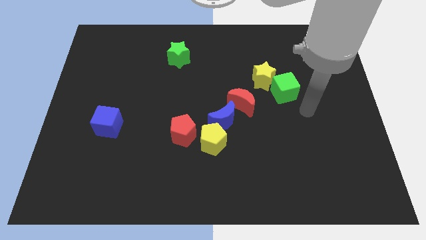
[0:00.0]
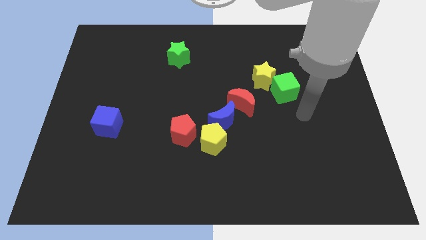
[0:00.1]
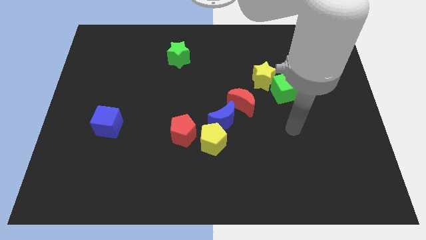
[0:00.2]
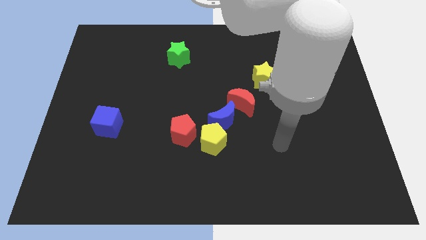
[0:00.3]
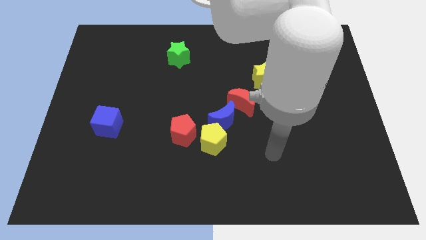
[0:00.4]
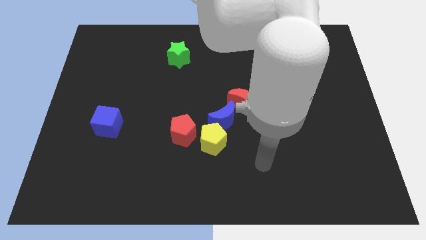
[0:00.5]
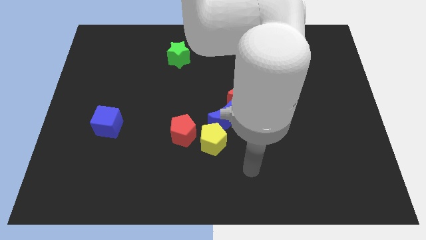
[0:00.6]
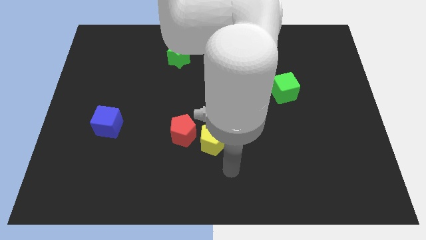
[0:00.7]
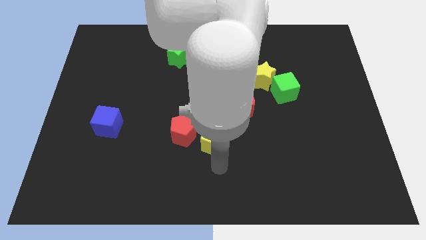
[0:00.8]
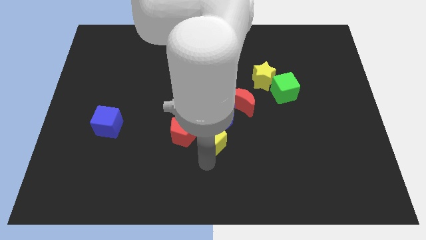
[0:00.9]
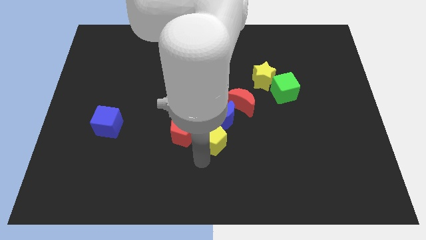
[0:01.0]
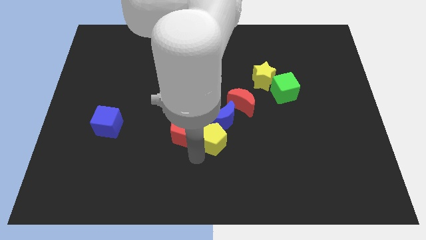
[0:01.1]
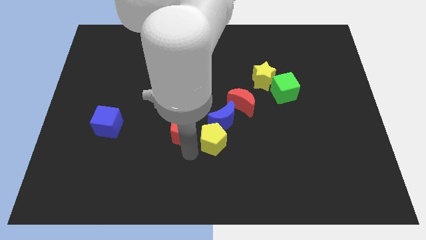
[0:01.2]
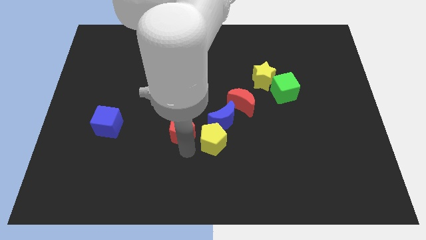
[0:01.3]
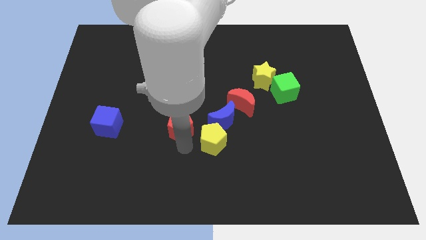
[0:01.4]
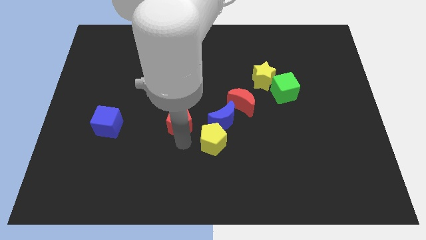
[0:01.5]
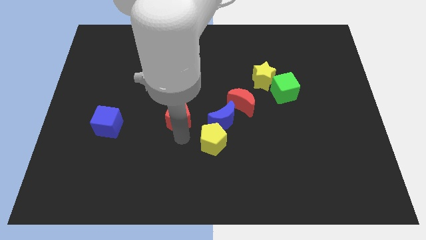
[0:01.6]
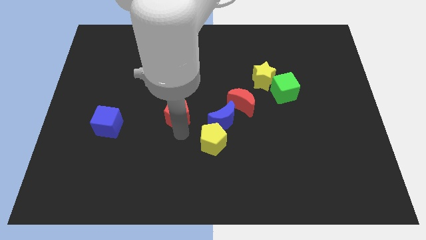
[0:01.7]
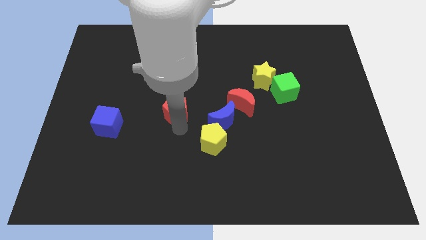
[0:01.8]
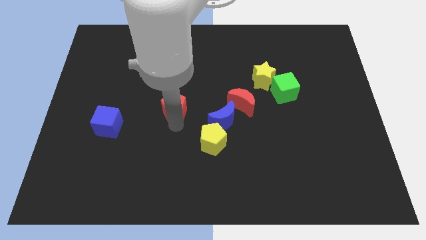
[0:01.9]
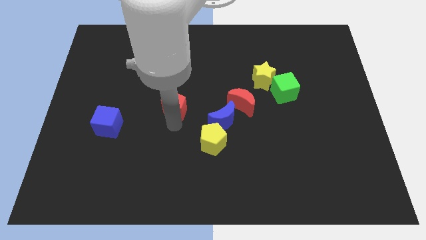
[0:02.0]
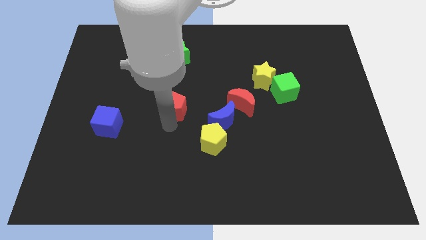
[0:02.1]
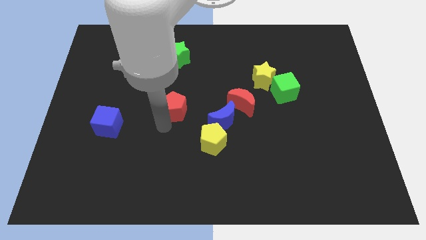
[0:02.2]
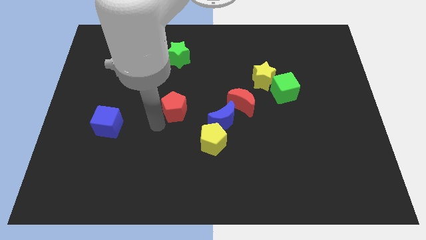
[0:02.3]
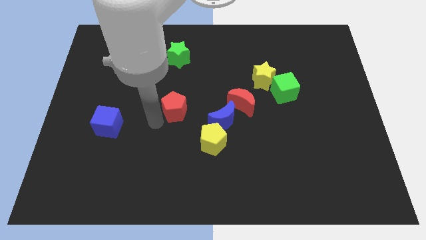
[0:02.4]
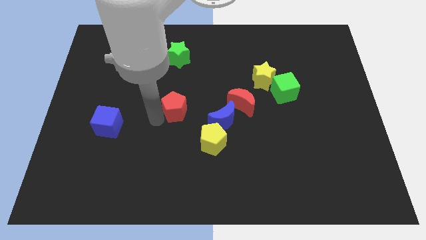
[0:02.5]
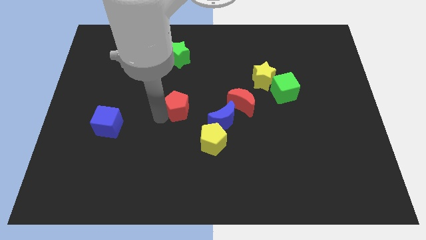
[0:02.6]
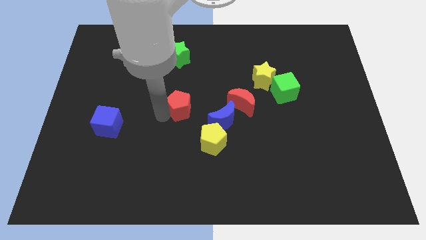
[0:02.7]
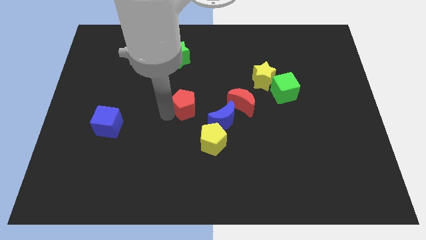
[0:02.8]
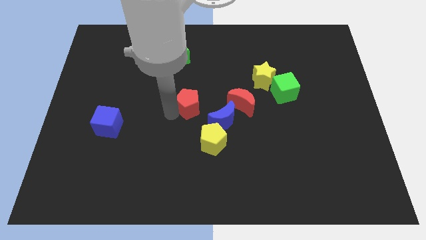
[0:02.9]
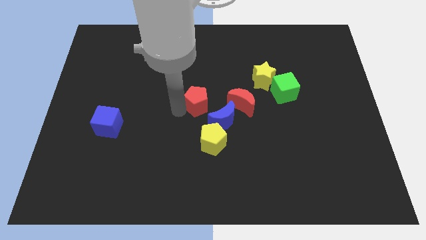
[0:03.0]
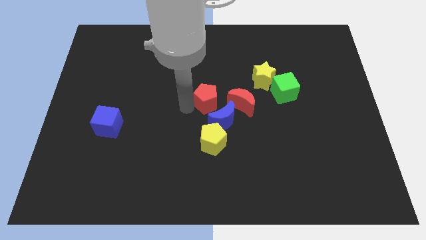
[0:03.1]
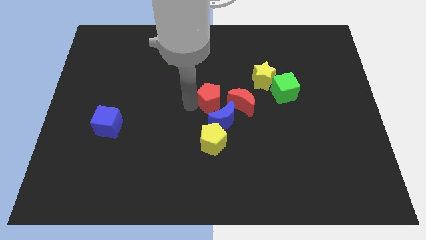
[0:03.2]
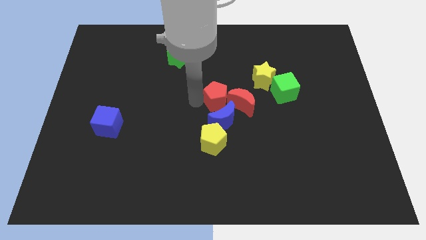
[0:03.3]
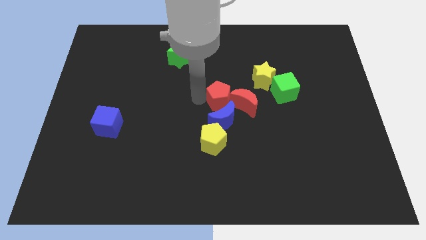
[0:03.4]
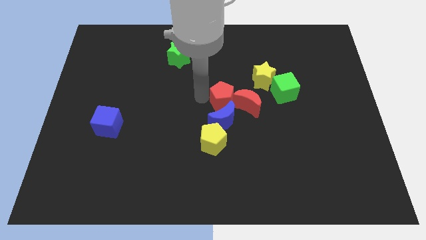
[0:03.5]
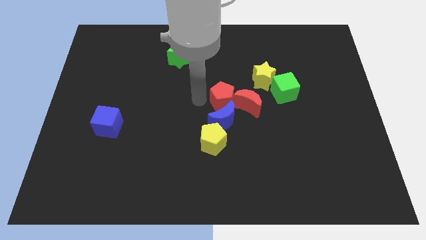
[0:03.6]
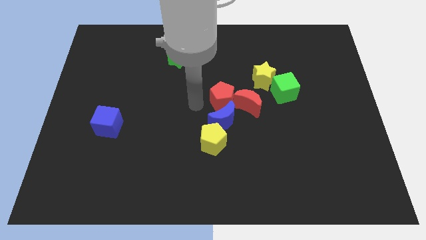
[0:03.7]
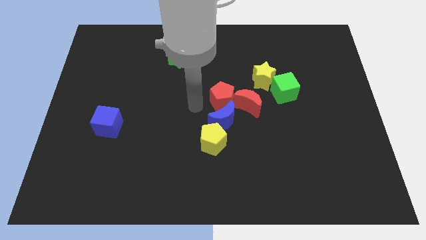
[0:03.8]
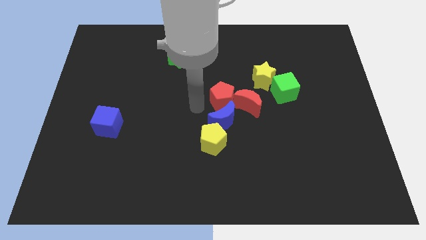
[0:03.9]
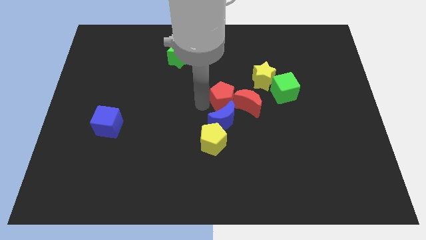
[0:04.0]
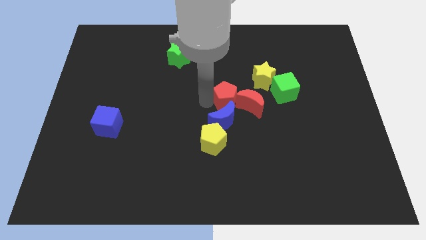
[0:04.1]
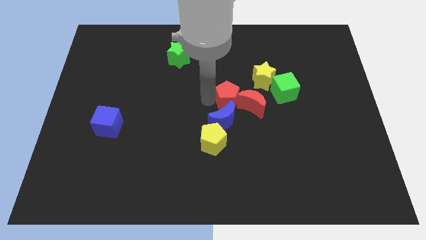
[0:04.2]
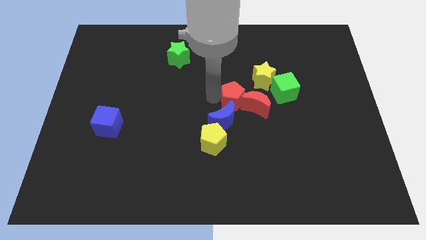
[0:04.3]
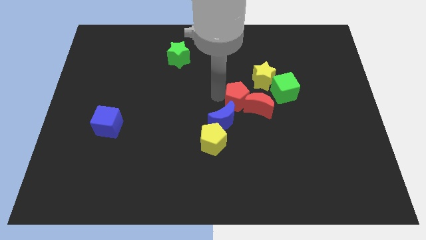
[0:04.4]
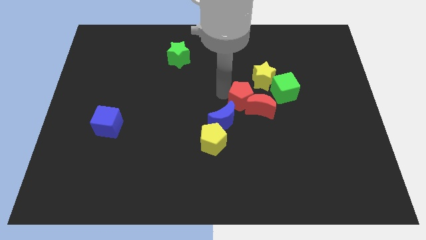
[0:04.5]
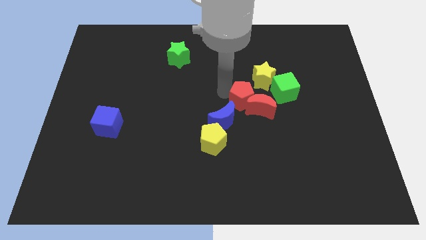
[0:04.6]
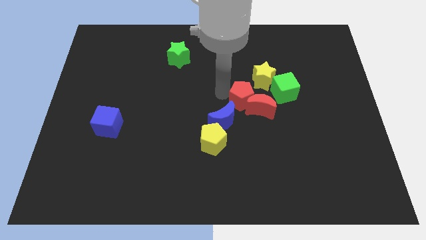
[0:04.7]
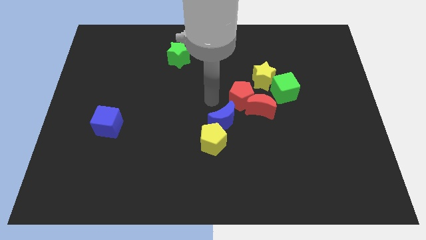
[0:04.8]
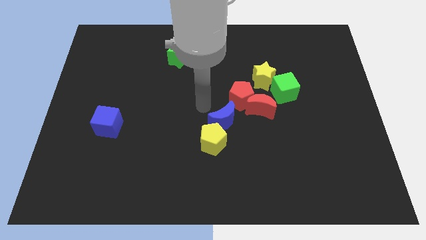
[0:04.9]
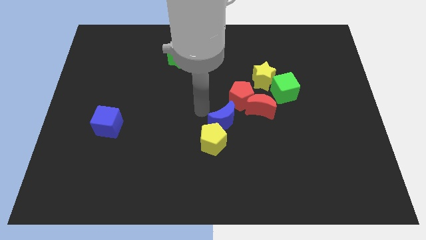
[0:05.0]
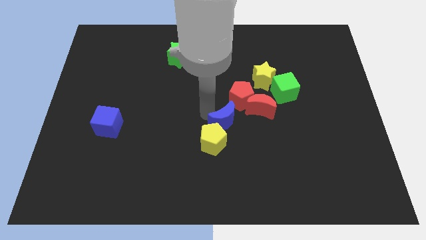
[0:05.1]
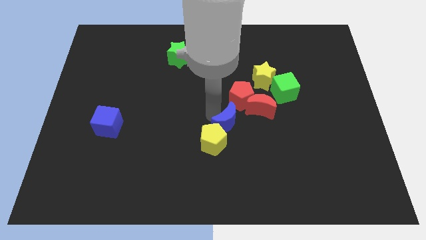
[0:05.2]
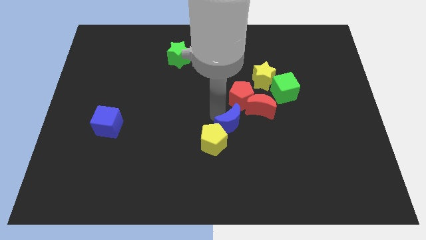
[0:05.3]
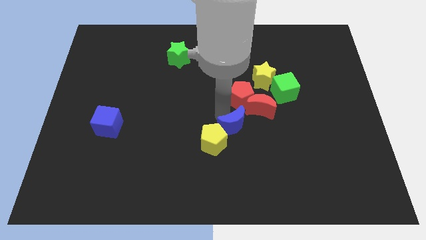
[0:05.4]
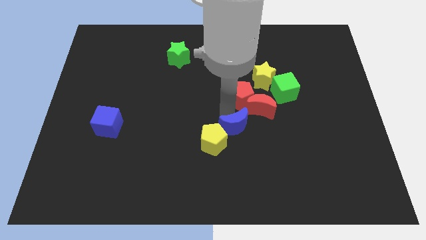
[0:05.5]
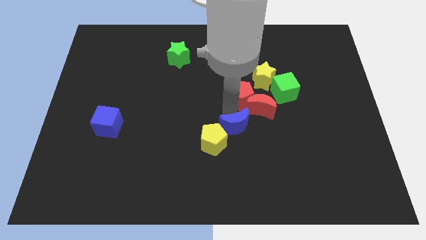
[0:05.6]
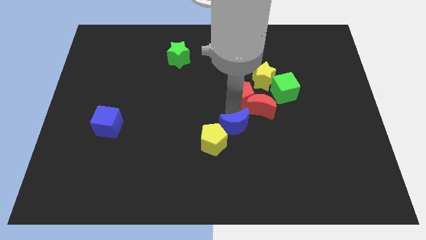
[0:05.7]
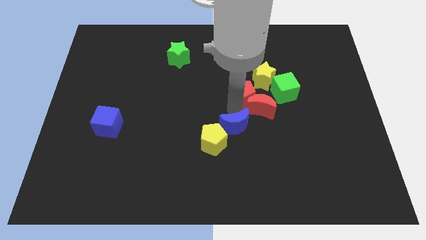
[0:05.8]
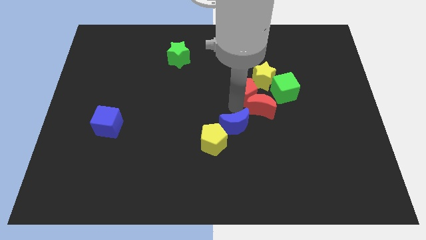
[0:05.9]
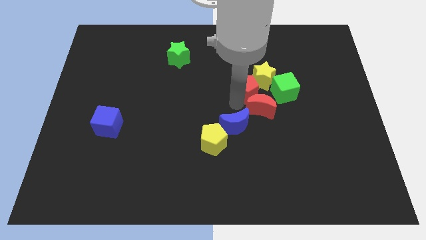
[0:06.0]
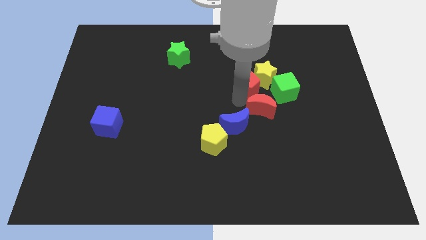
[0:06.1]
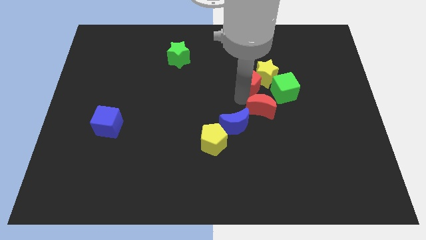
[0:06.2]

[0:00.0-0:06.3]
slide the red pentagon to the yellow star

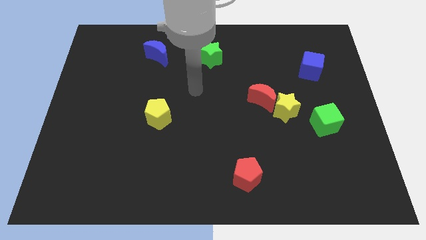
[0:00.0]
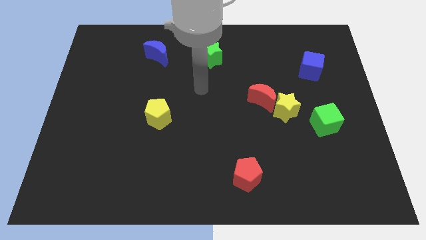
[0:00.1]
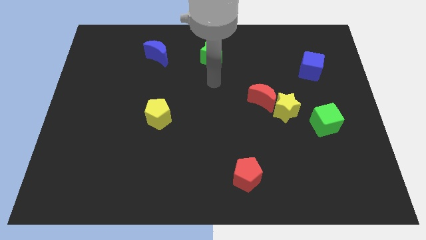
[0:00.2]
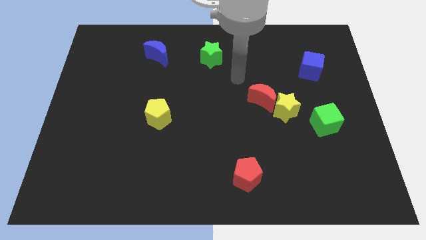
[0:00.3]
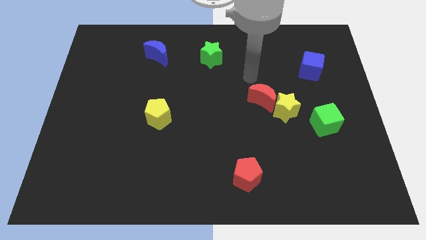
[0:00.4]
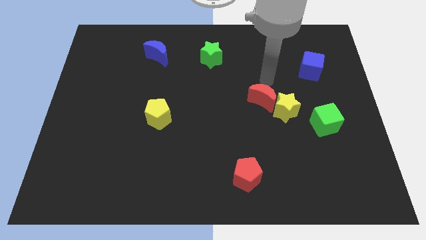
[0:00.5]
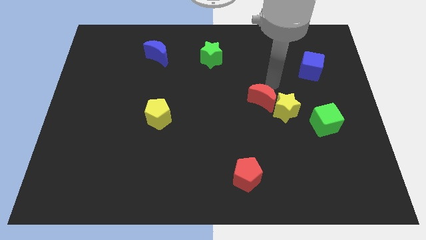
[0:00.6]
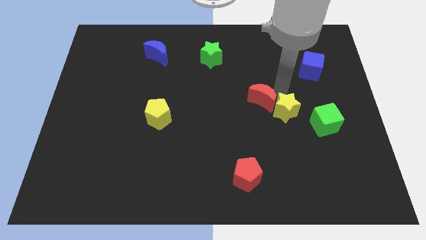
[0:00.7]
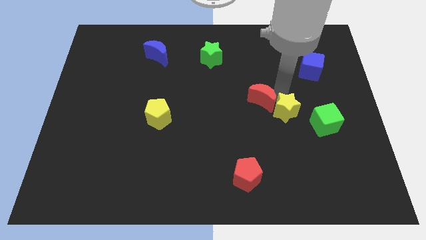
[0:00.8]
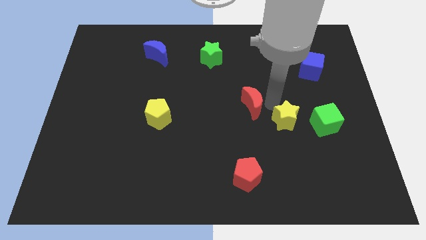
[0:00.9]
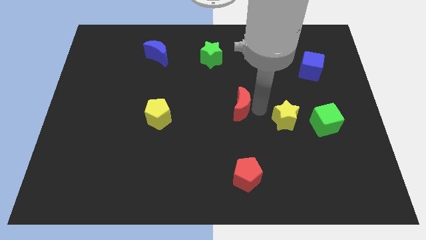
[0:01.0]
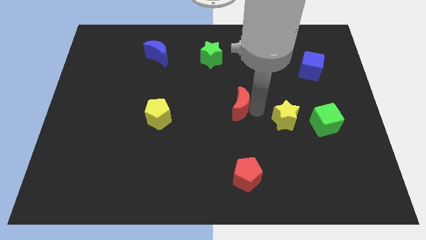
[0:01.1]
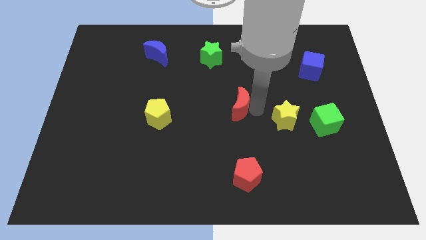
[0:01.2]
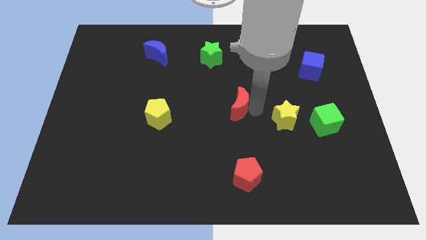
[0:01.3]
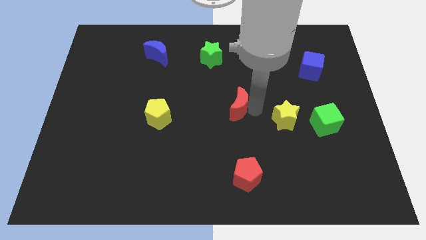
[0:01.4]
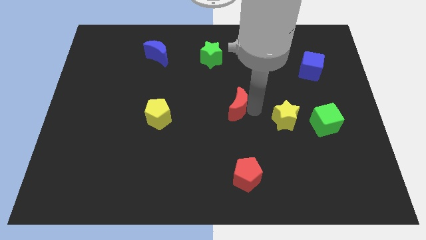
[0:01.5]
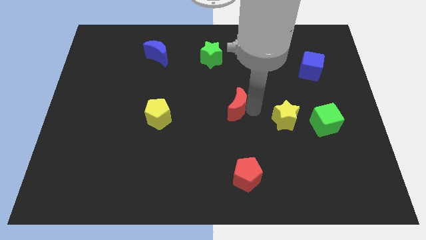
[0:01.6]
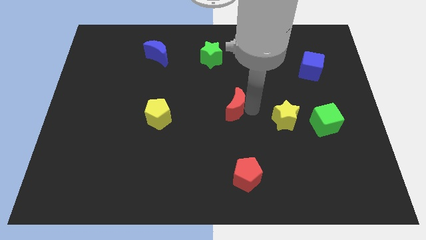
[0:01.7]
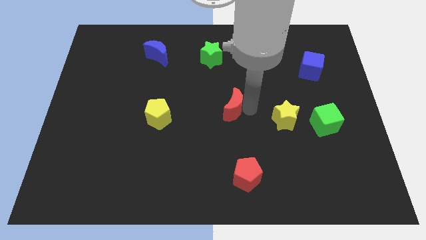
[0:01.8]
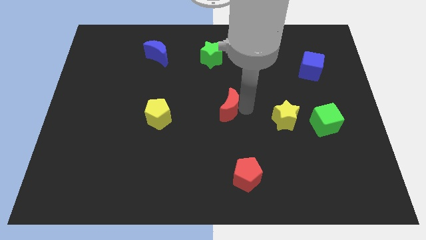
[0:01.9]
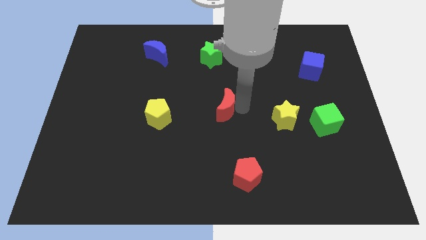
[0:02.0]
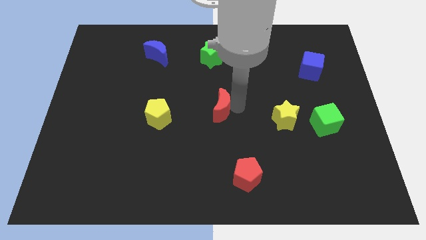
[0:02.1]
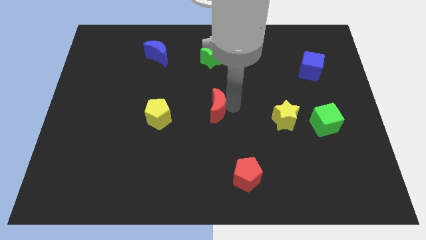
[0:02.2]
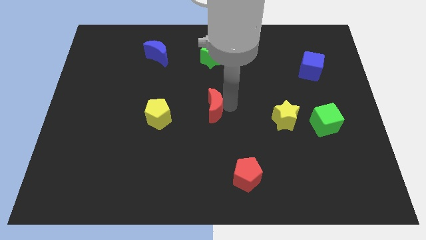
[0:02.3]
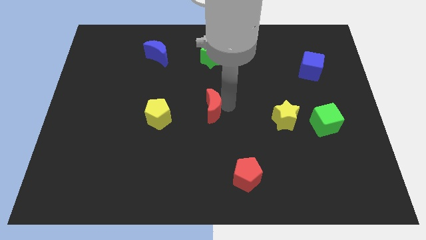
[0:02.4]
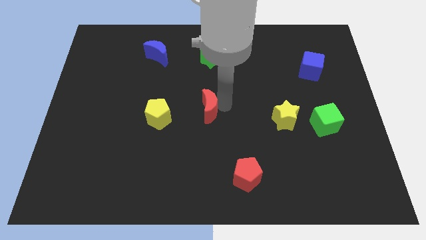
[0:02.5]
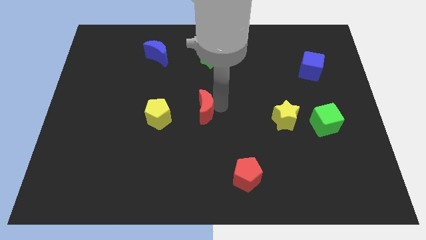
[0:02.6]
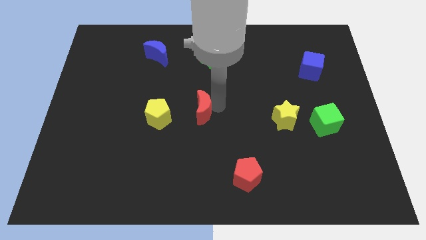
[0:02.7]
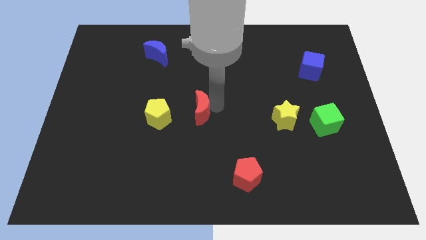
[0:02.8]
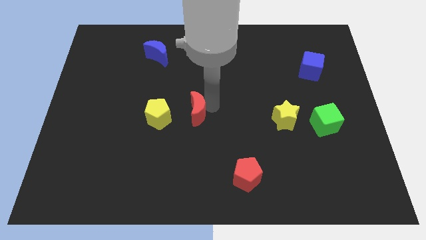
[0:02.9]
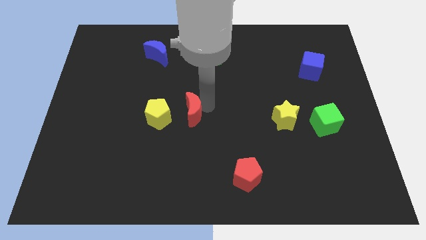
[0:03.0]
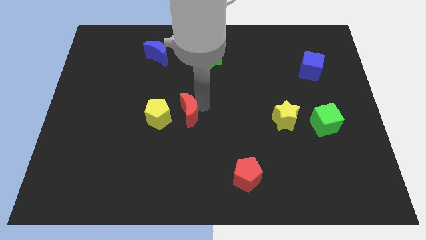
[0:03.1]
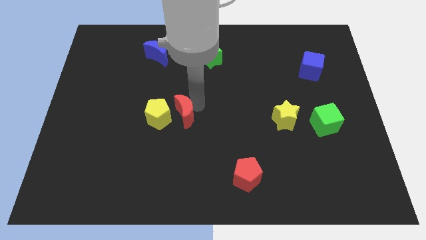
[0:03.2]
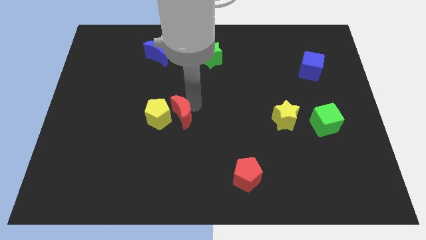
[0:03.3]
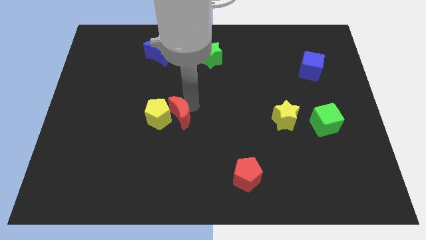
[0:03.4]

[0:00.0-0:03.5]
move the red moon close to the yellow pentagon
